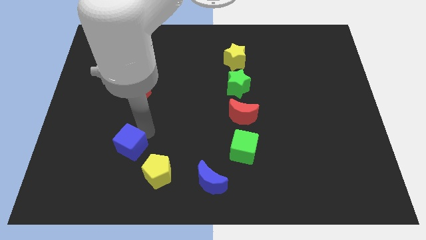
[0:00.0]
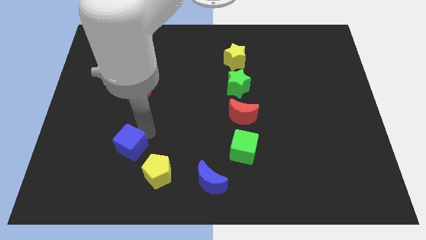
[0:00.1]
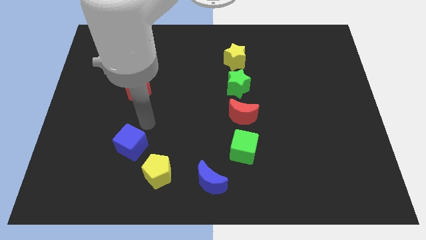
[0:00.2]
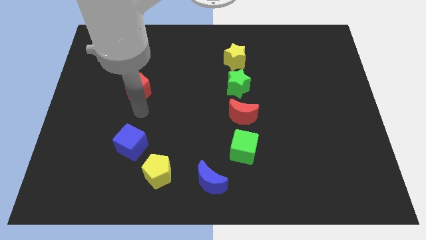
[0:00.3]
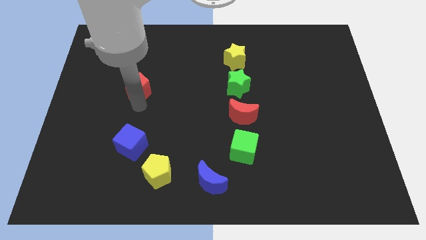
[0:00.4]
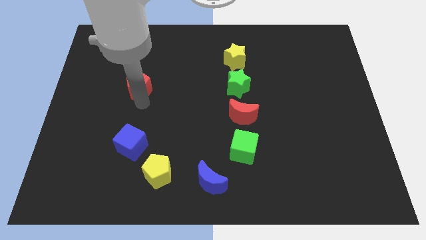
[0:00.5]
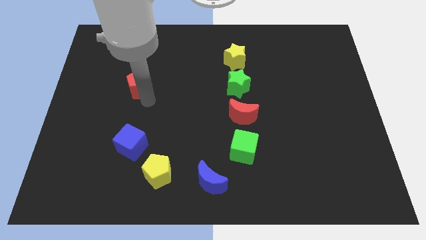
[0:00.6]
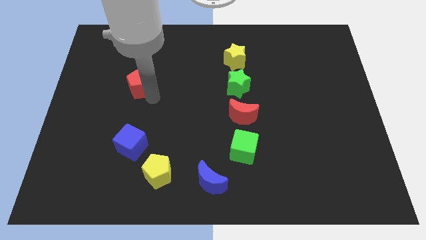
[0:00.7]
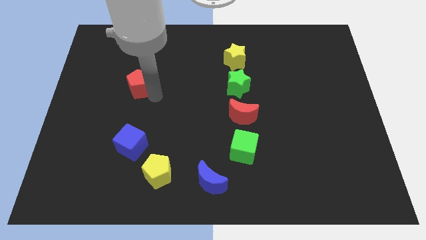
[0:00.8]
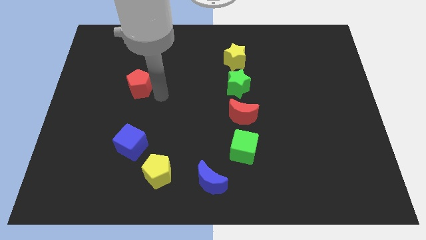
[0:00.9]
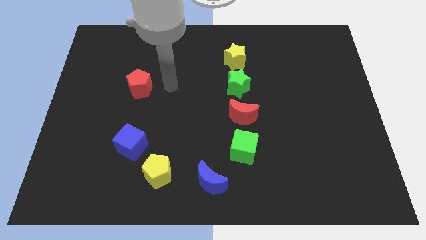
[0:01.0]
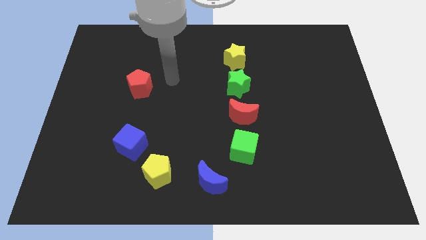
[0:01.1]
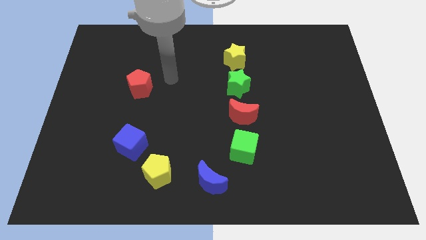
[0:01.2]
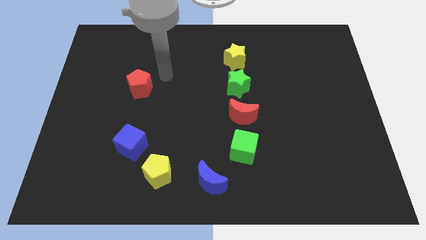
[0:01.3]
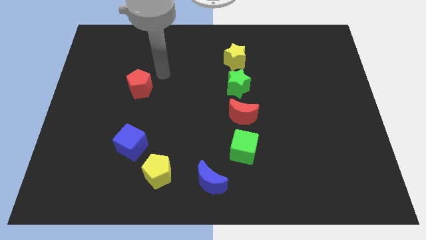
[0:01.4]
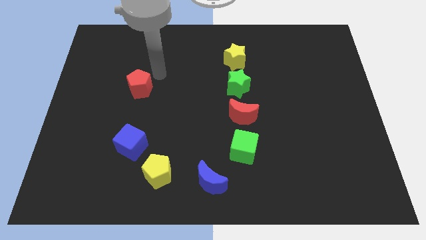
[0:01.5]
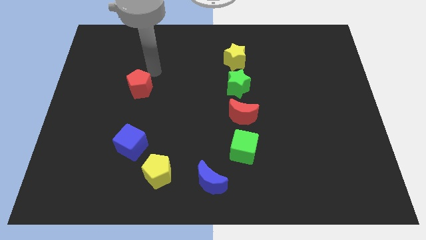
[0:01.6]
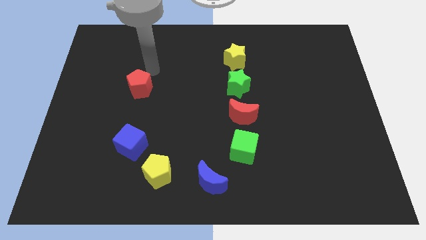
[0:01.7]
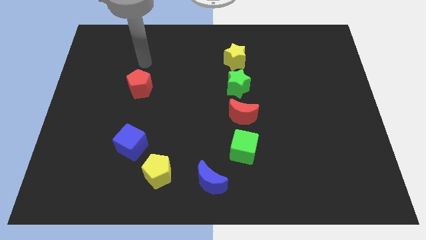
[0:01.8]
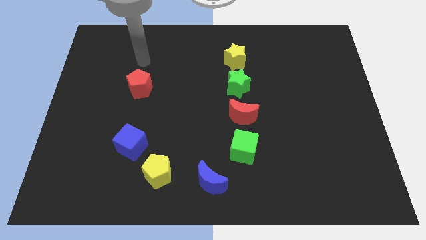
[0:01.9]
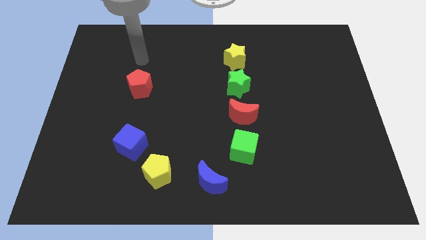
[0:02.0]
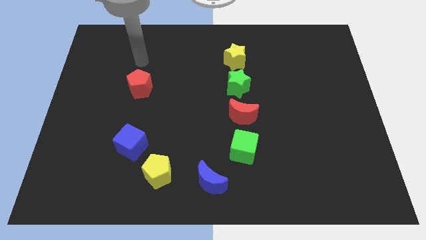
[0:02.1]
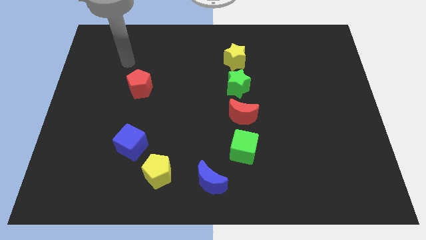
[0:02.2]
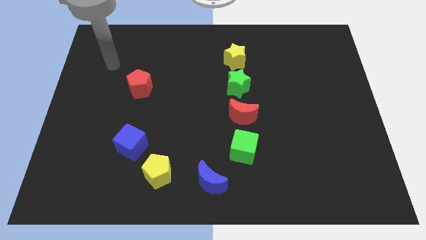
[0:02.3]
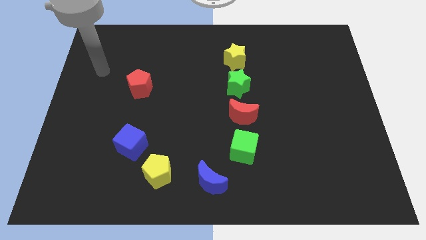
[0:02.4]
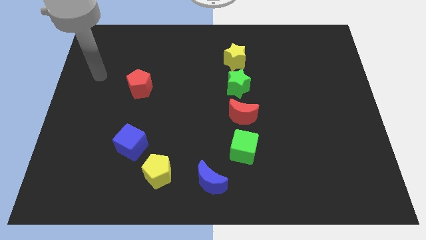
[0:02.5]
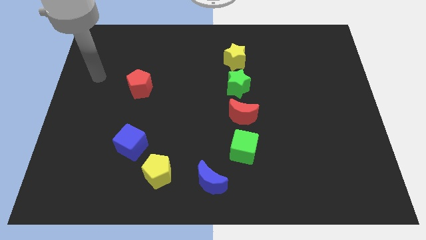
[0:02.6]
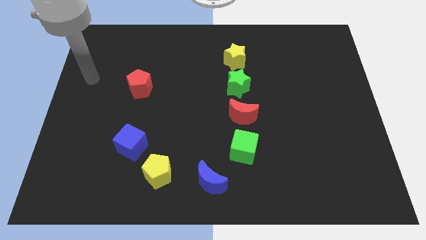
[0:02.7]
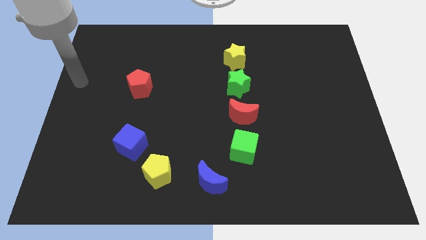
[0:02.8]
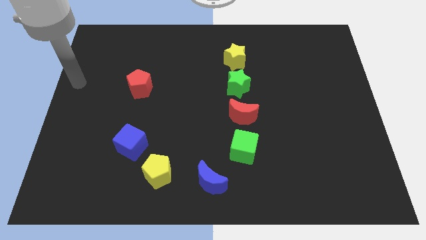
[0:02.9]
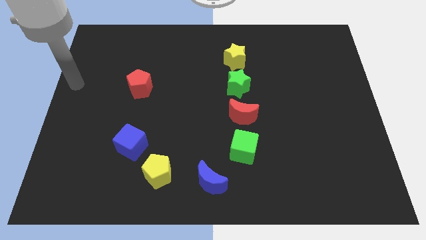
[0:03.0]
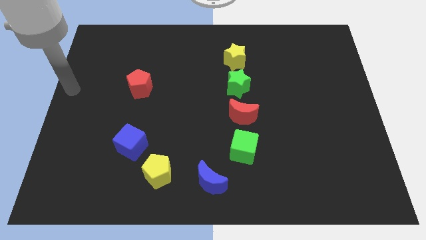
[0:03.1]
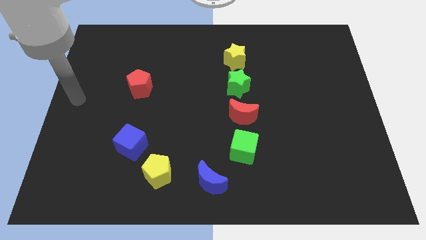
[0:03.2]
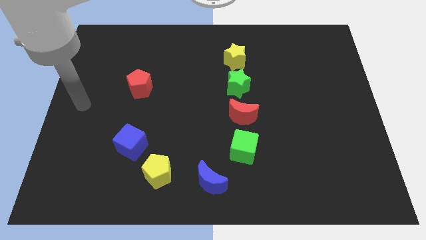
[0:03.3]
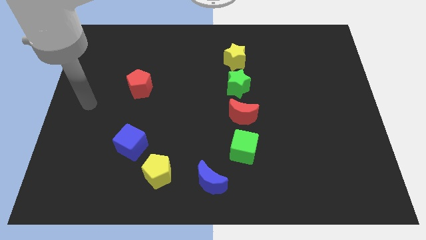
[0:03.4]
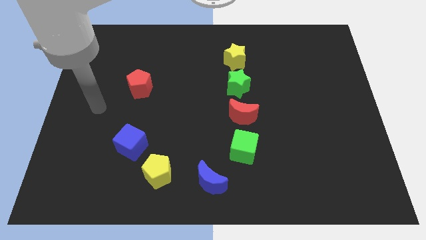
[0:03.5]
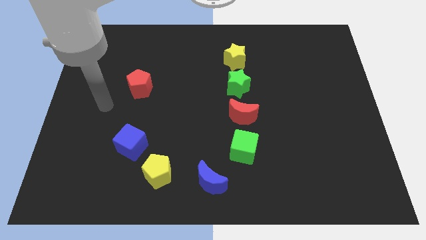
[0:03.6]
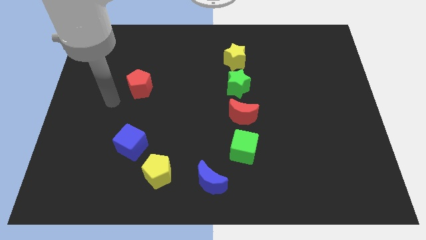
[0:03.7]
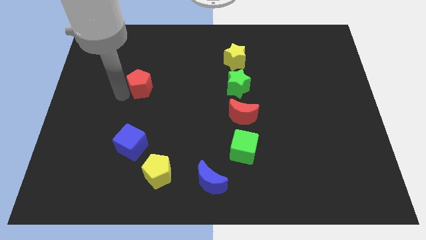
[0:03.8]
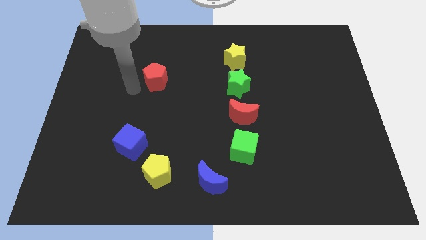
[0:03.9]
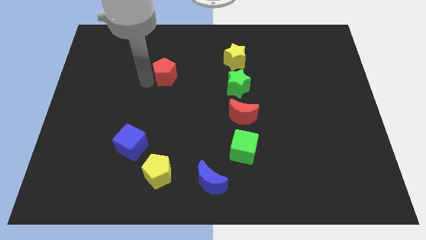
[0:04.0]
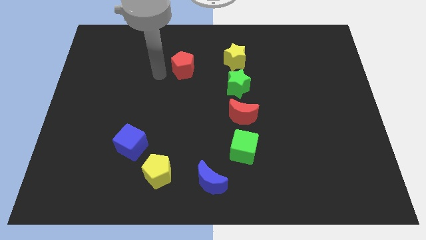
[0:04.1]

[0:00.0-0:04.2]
move your arm away from the blue cube

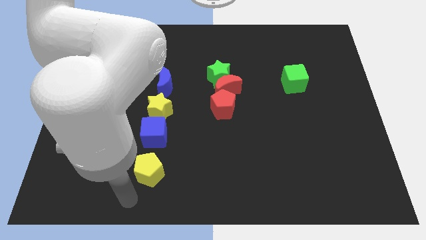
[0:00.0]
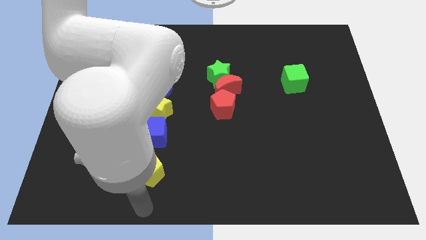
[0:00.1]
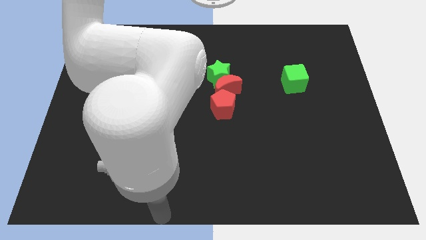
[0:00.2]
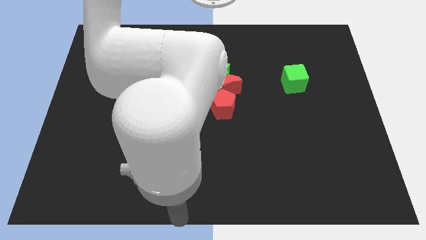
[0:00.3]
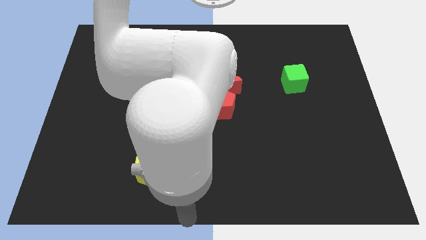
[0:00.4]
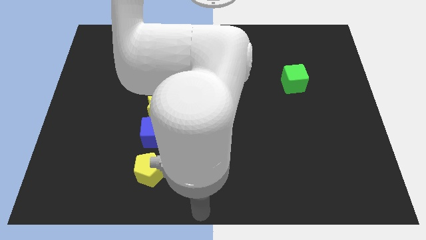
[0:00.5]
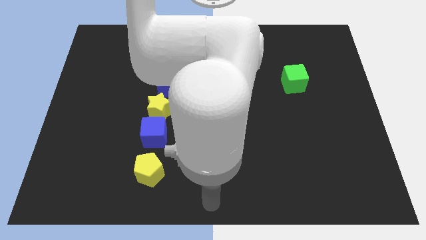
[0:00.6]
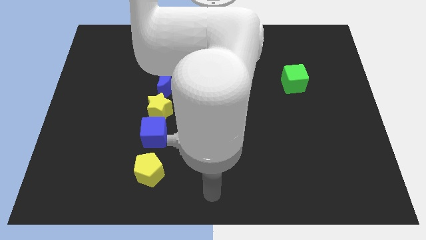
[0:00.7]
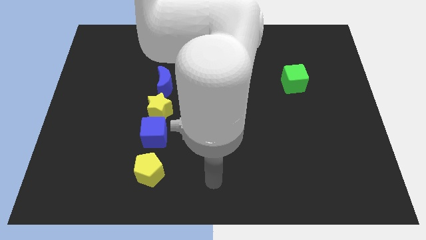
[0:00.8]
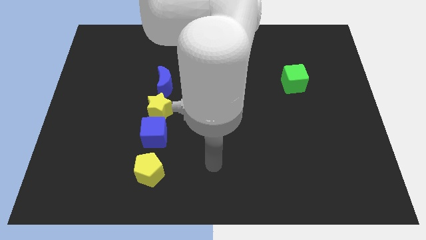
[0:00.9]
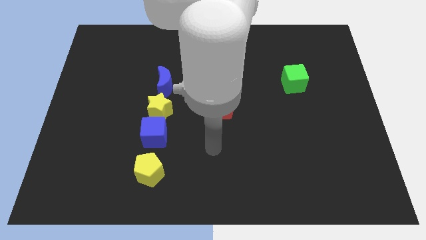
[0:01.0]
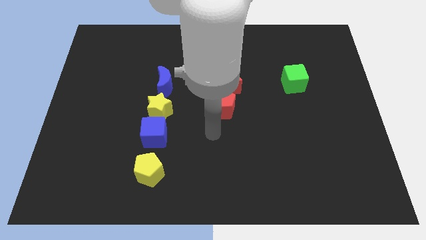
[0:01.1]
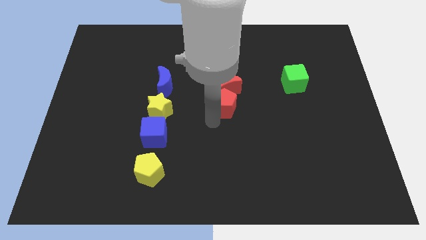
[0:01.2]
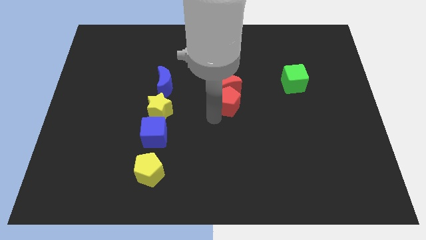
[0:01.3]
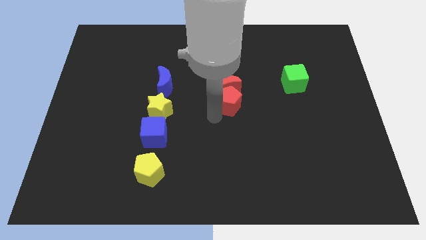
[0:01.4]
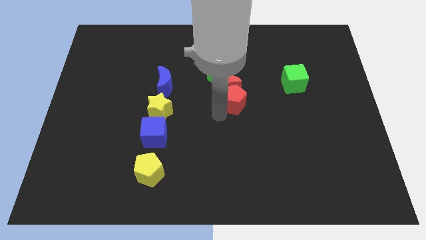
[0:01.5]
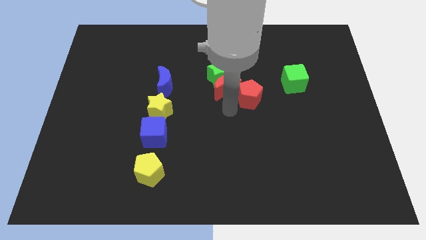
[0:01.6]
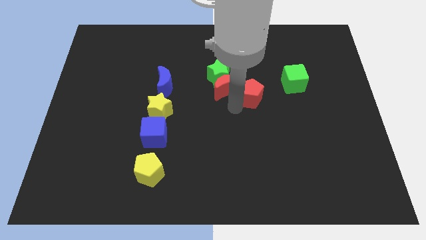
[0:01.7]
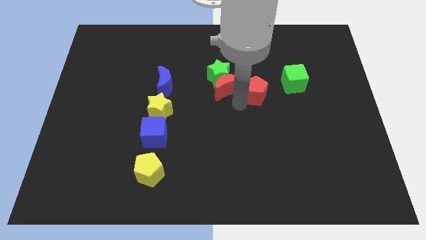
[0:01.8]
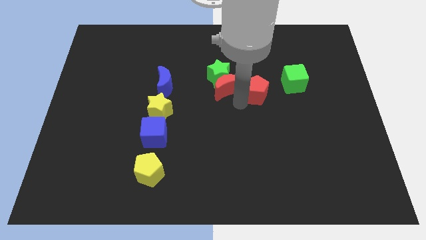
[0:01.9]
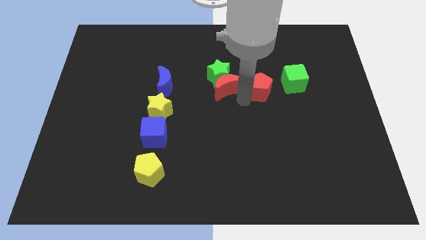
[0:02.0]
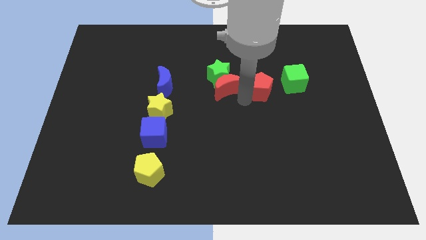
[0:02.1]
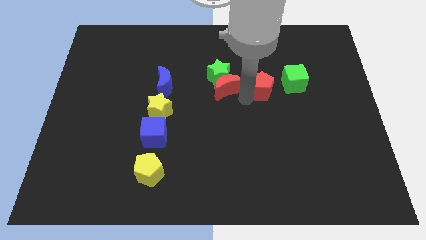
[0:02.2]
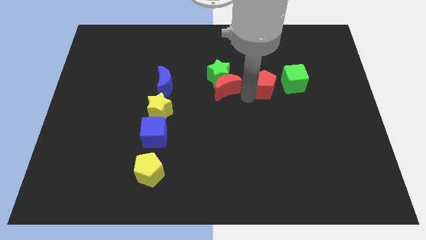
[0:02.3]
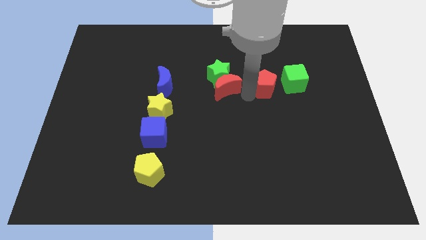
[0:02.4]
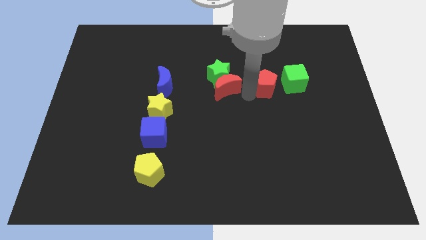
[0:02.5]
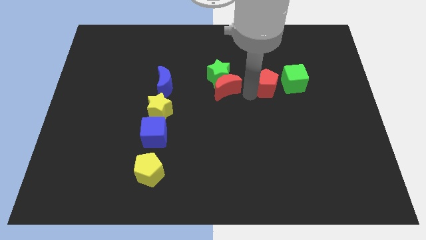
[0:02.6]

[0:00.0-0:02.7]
place red pentagon to the right of red moon

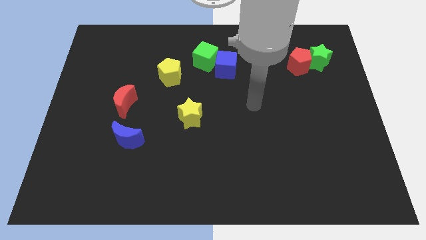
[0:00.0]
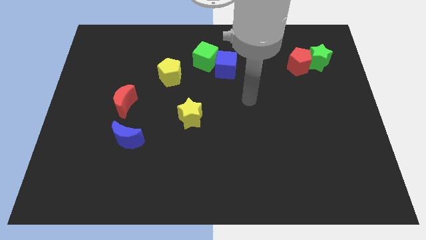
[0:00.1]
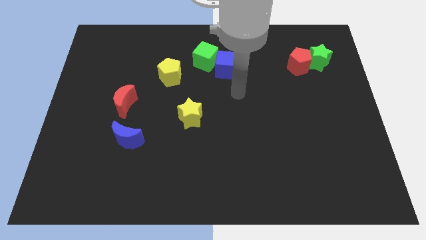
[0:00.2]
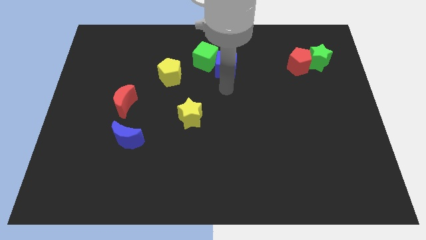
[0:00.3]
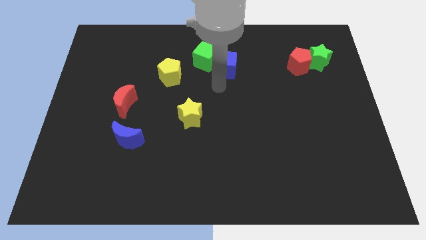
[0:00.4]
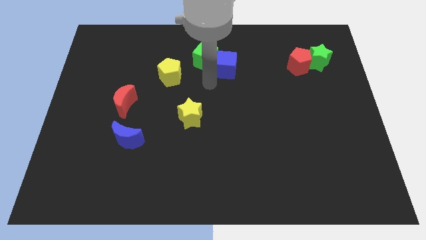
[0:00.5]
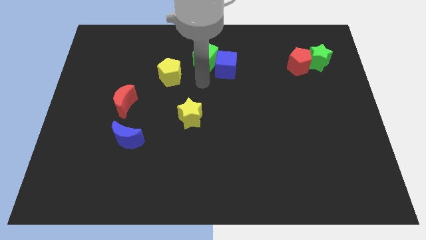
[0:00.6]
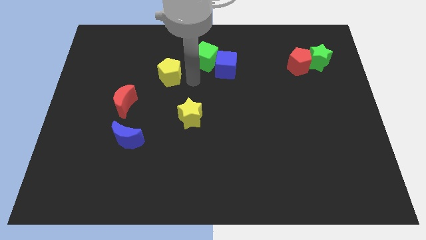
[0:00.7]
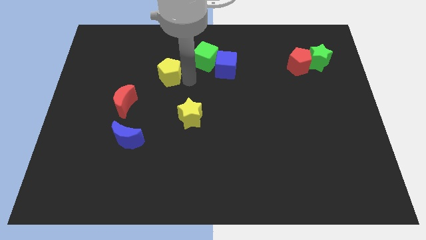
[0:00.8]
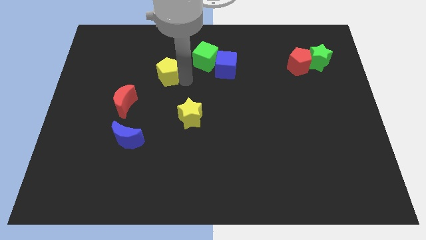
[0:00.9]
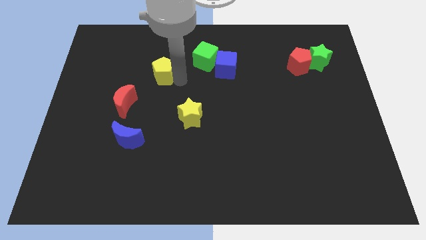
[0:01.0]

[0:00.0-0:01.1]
touch the bottom of yellow pentagon

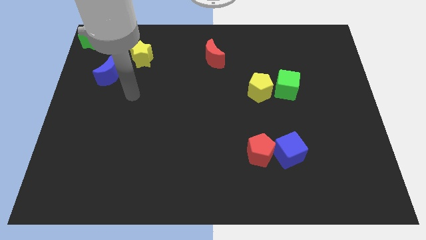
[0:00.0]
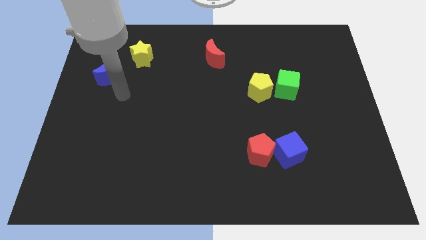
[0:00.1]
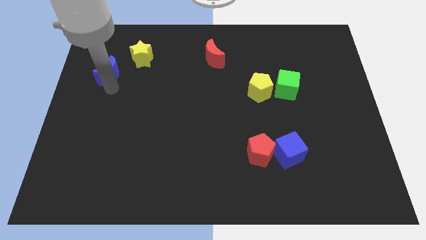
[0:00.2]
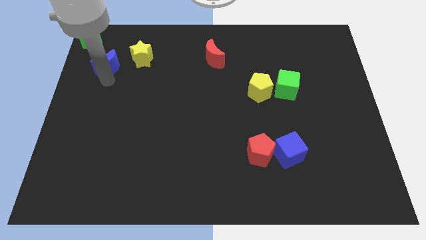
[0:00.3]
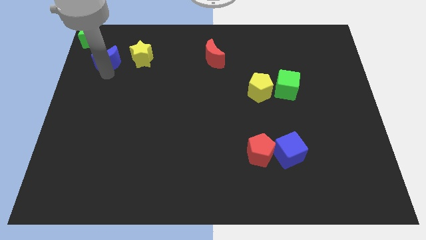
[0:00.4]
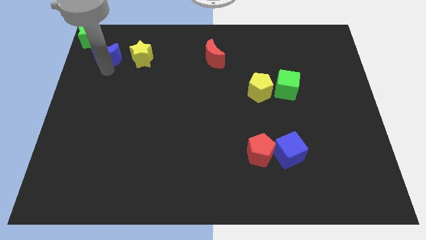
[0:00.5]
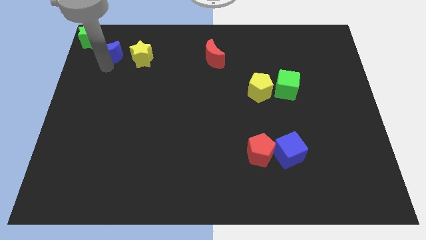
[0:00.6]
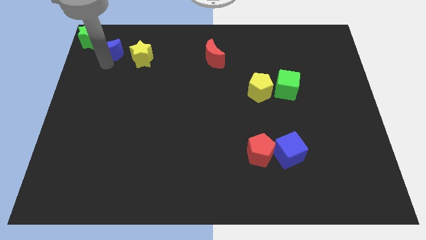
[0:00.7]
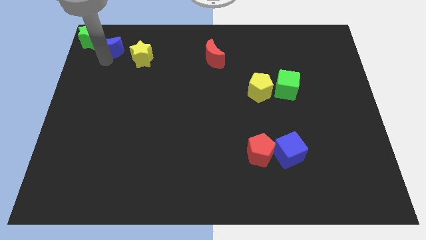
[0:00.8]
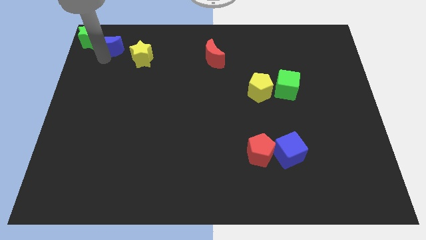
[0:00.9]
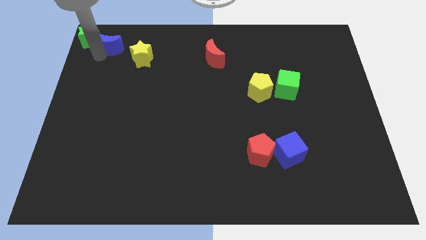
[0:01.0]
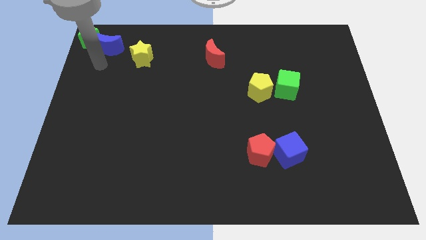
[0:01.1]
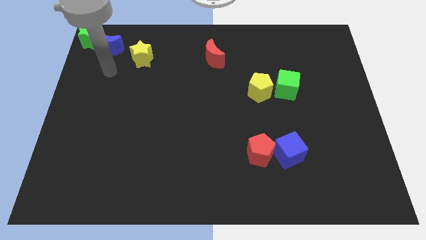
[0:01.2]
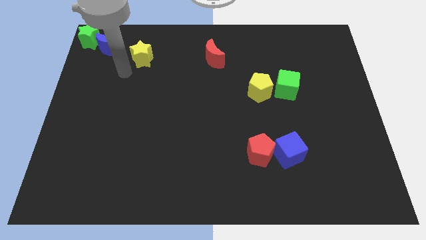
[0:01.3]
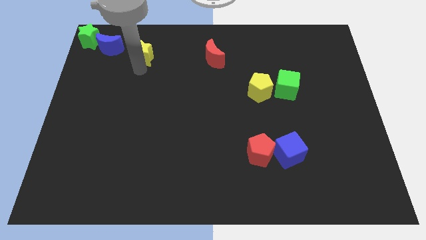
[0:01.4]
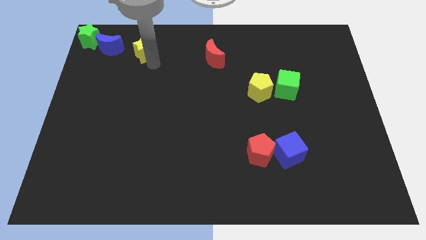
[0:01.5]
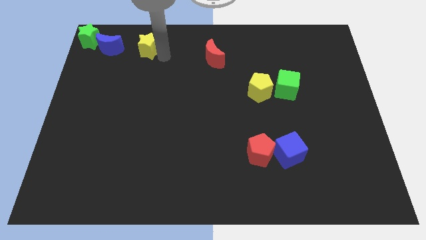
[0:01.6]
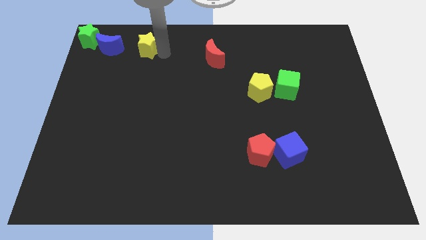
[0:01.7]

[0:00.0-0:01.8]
place blue crescent to the right of green star
